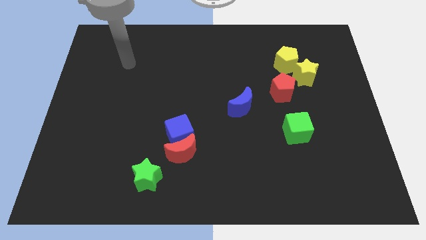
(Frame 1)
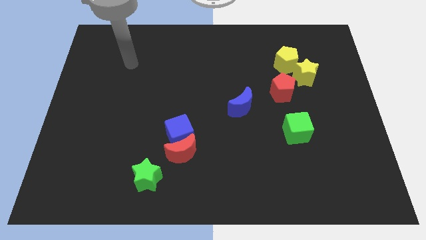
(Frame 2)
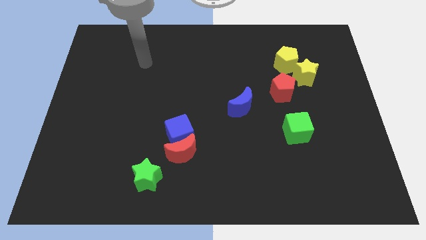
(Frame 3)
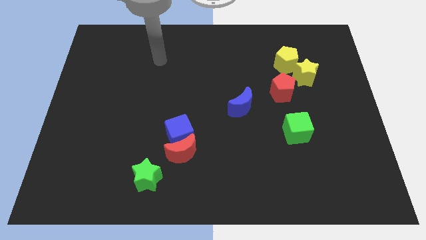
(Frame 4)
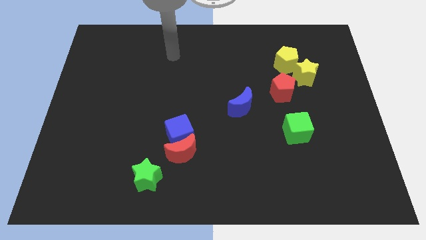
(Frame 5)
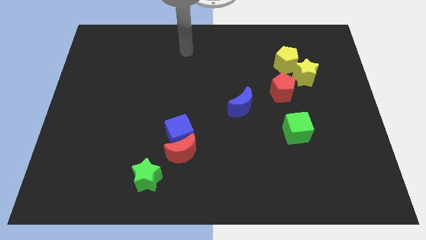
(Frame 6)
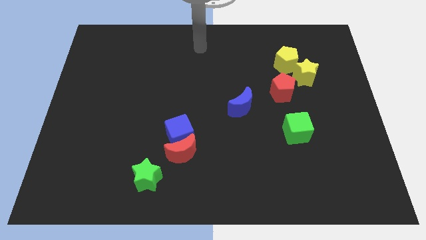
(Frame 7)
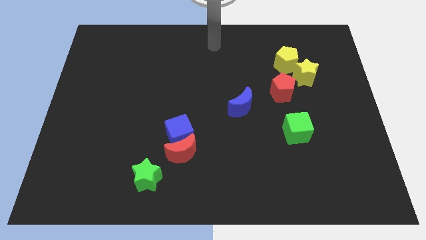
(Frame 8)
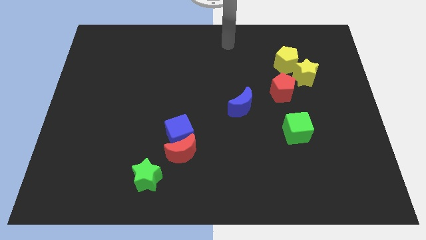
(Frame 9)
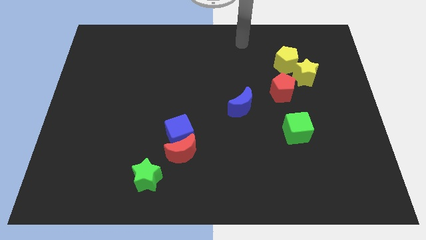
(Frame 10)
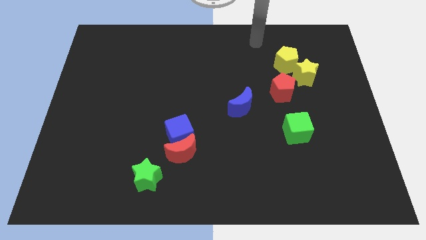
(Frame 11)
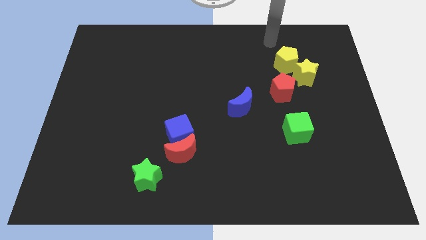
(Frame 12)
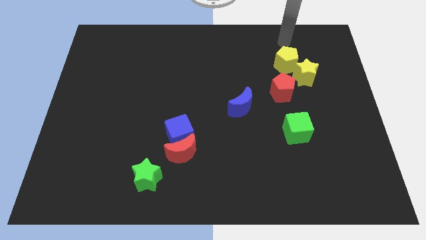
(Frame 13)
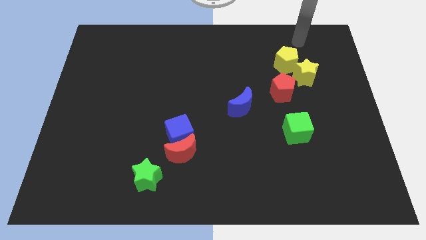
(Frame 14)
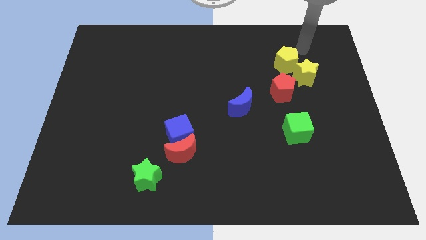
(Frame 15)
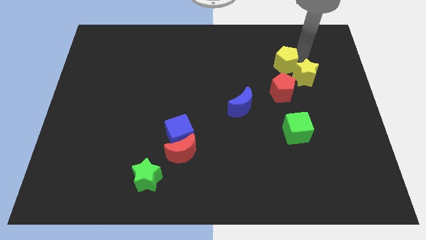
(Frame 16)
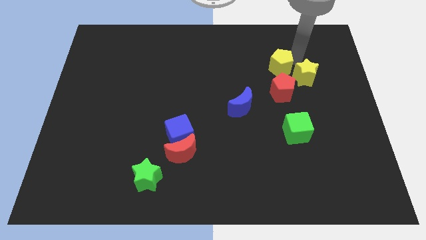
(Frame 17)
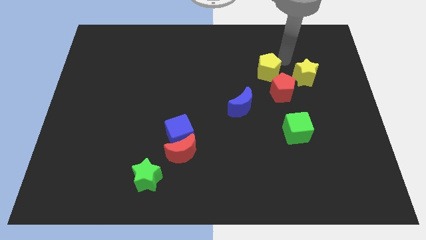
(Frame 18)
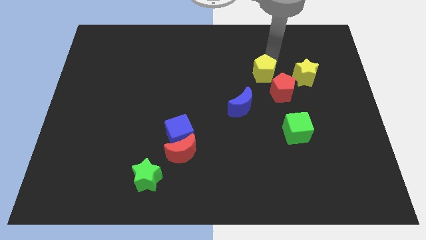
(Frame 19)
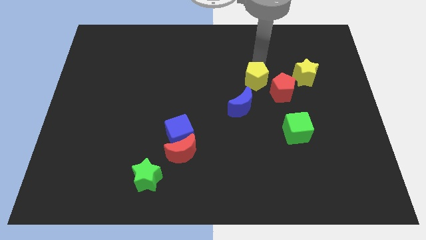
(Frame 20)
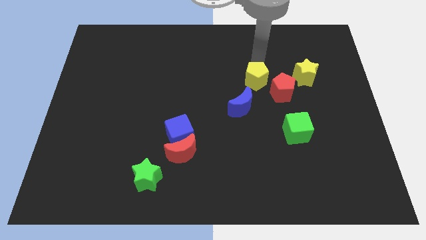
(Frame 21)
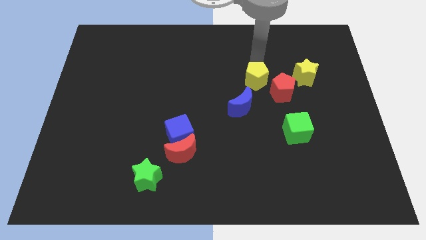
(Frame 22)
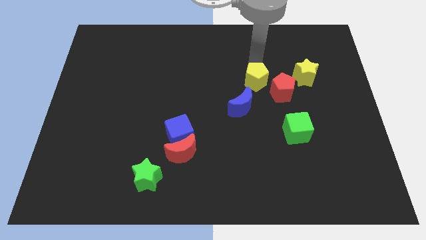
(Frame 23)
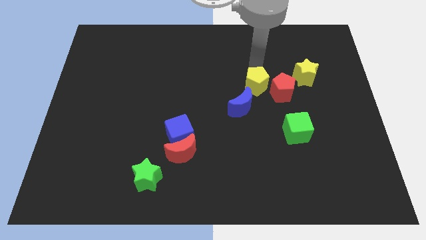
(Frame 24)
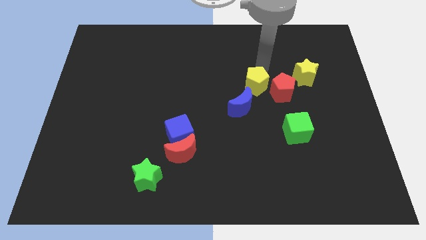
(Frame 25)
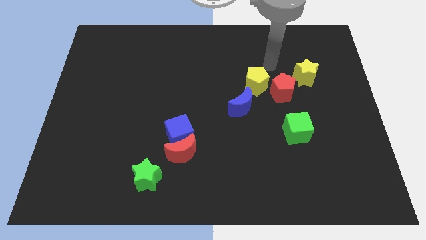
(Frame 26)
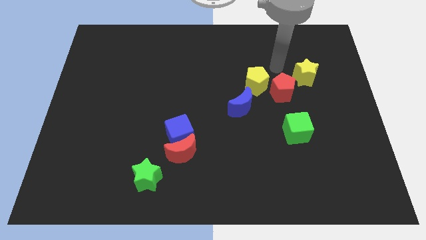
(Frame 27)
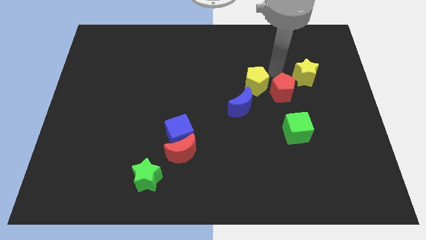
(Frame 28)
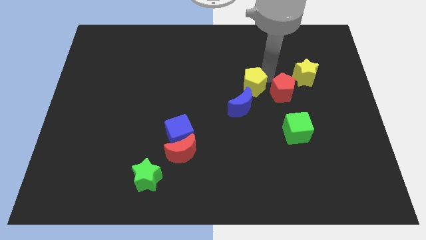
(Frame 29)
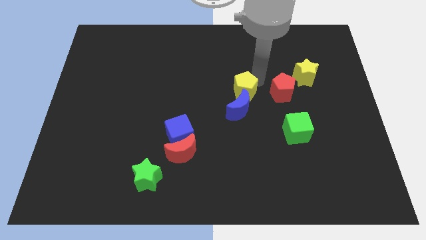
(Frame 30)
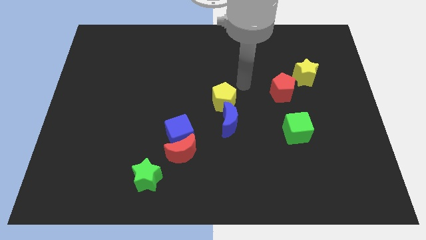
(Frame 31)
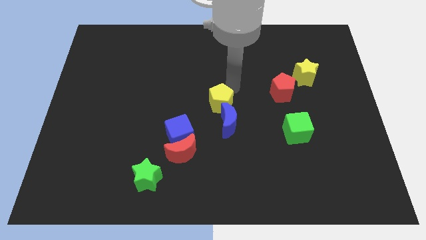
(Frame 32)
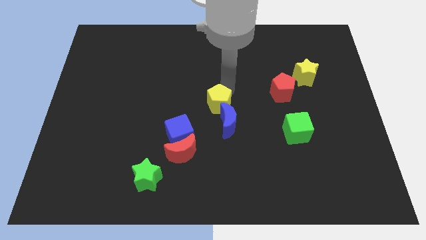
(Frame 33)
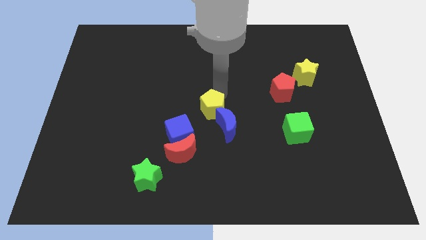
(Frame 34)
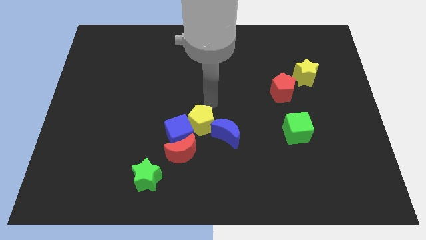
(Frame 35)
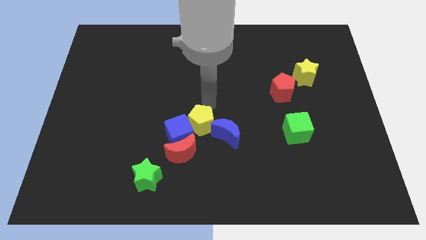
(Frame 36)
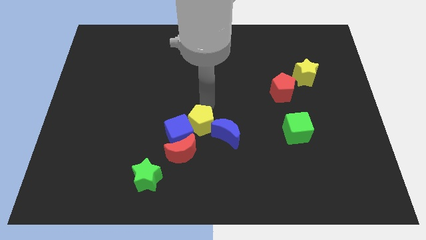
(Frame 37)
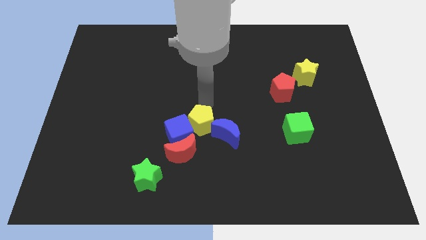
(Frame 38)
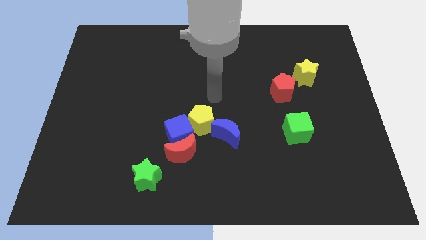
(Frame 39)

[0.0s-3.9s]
separate the yellow pentagon from the yellow star

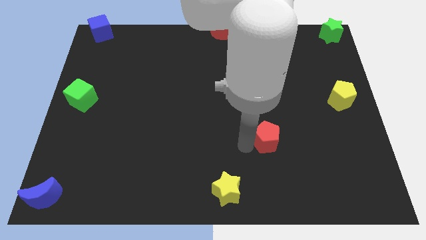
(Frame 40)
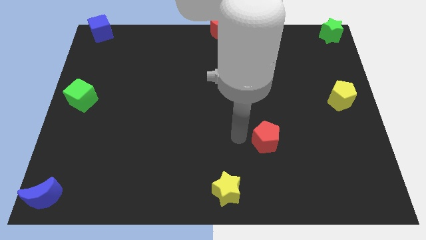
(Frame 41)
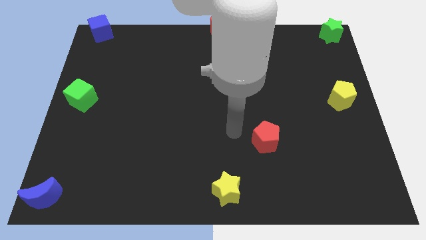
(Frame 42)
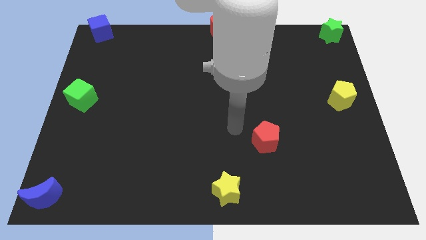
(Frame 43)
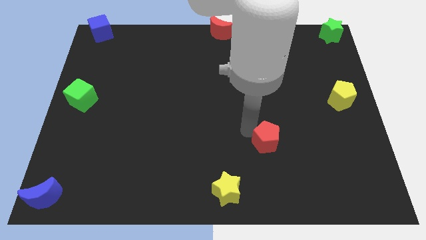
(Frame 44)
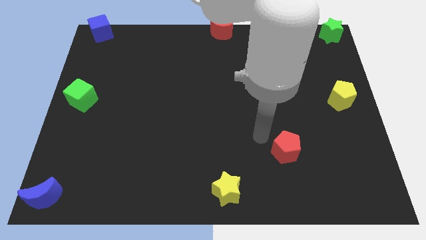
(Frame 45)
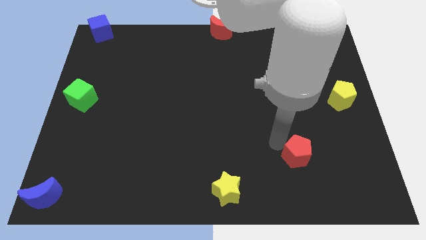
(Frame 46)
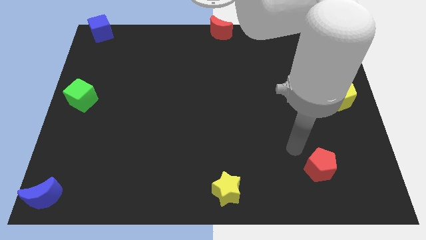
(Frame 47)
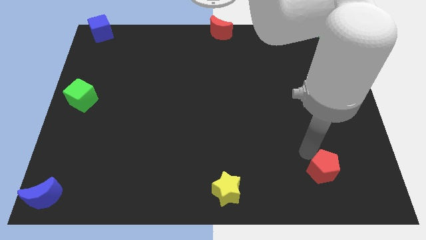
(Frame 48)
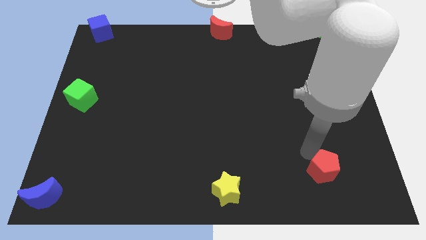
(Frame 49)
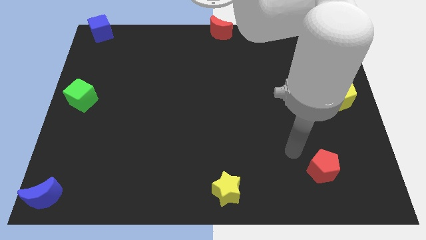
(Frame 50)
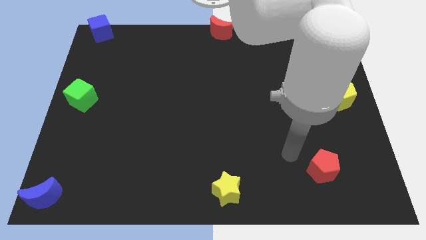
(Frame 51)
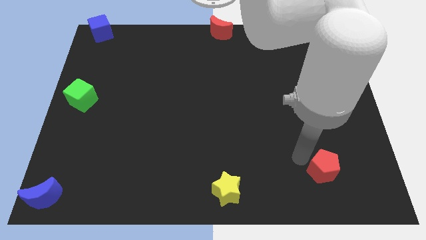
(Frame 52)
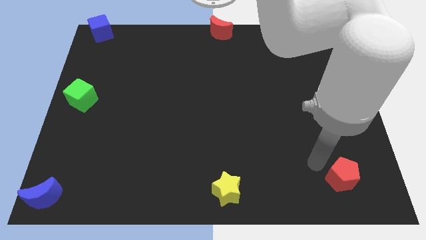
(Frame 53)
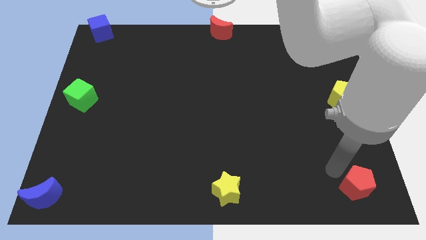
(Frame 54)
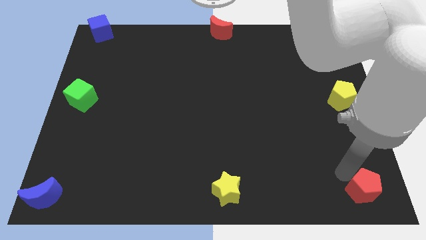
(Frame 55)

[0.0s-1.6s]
push the red pentagon towards the bottom right corner

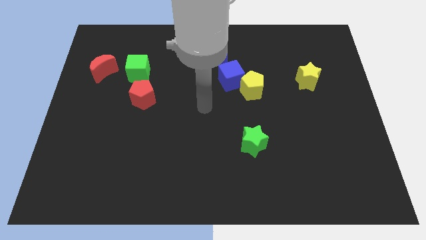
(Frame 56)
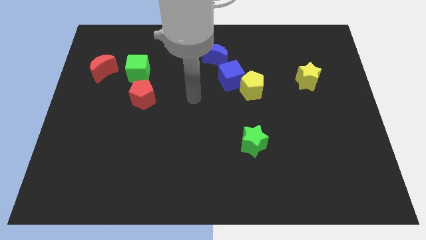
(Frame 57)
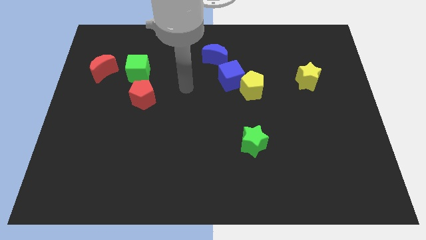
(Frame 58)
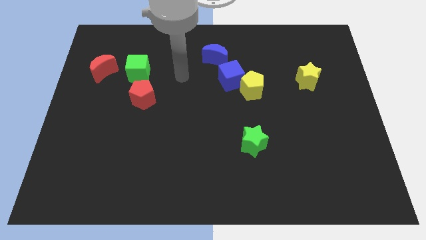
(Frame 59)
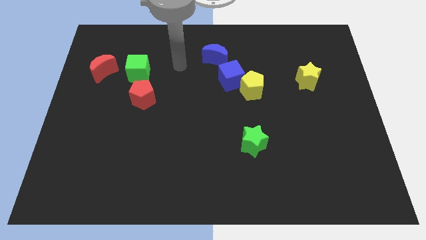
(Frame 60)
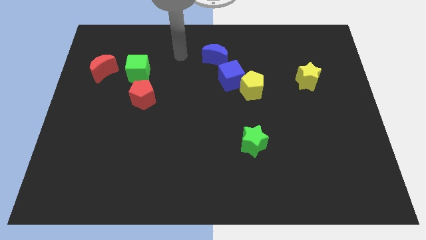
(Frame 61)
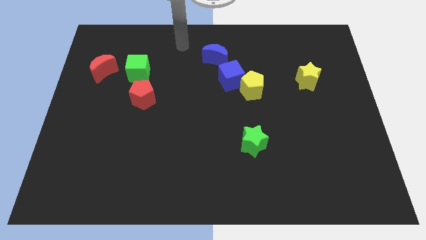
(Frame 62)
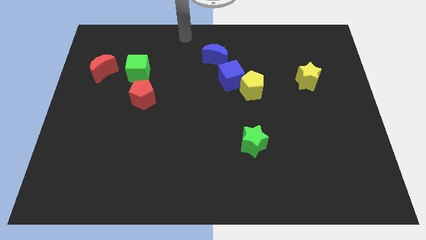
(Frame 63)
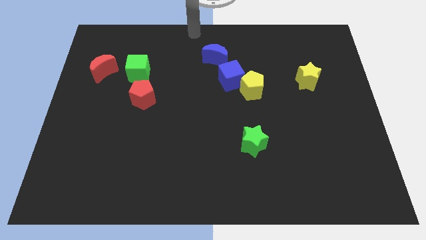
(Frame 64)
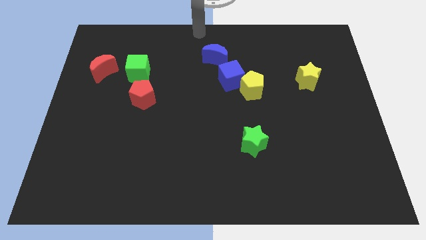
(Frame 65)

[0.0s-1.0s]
place your arm to the top center

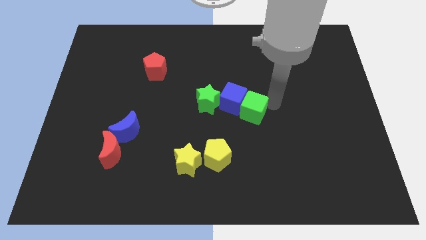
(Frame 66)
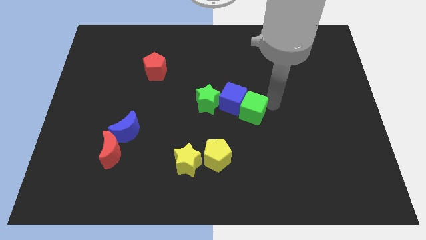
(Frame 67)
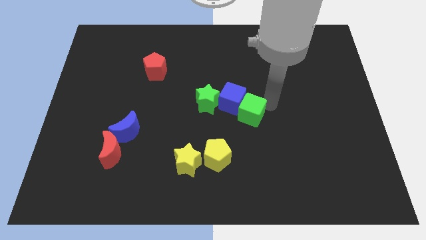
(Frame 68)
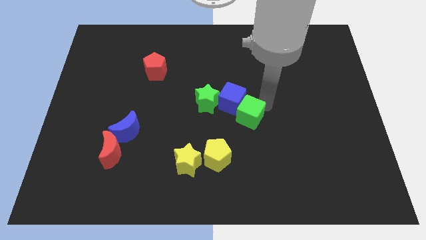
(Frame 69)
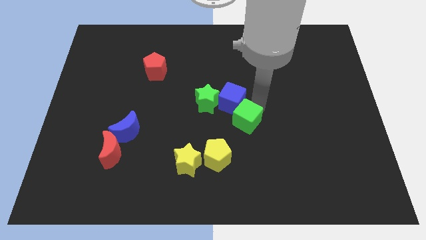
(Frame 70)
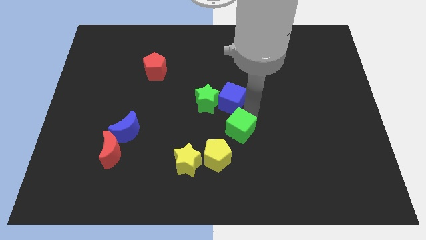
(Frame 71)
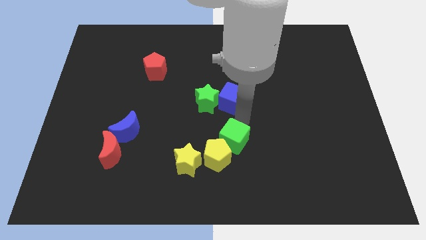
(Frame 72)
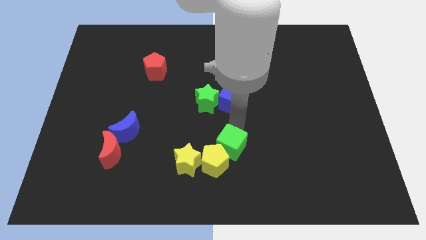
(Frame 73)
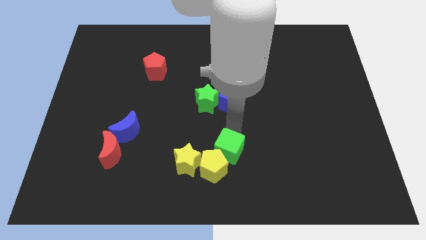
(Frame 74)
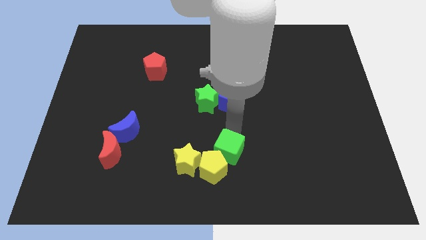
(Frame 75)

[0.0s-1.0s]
push the green cube into the yellow pentagon

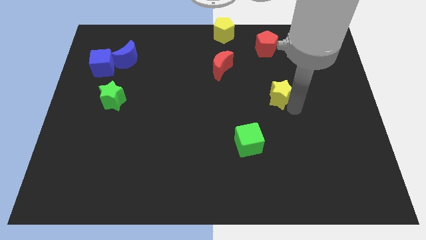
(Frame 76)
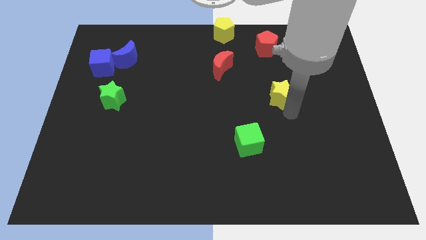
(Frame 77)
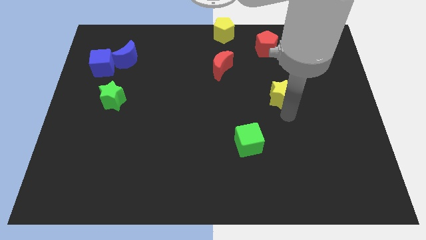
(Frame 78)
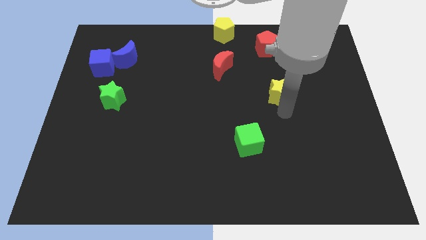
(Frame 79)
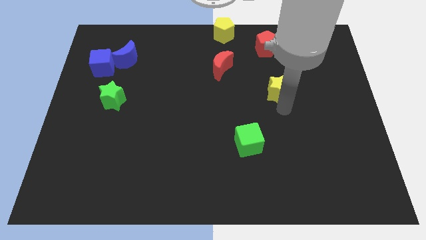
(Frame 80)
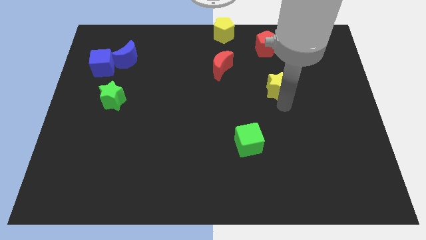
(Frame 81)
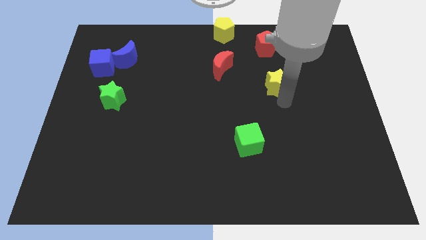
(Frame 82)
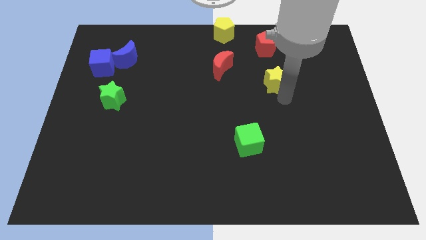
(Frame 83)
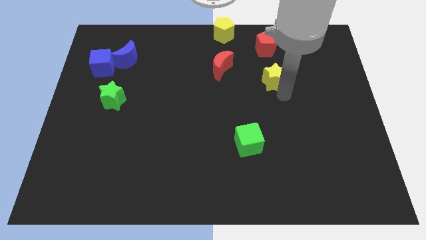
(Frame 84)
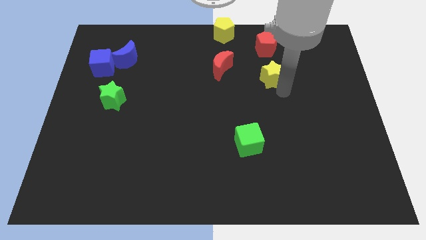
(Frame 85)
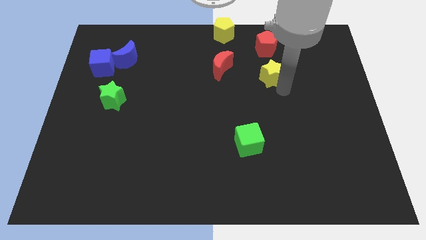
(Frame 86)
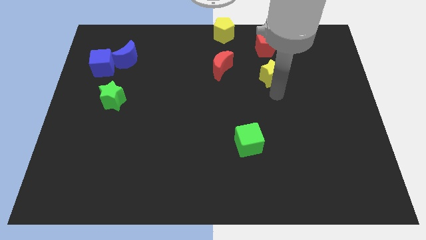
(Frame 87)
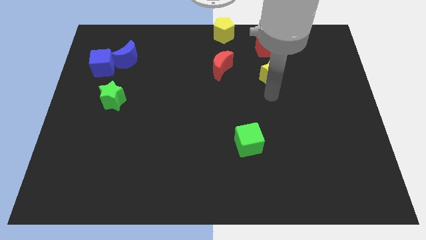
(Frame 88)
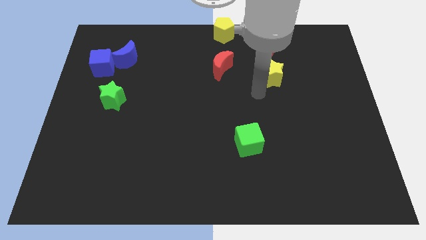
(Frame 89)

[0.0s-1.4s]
push the yellow star below the red pentagon
